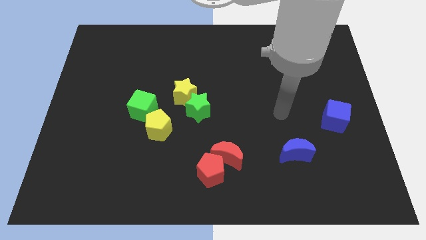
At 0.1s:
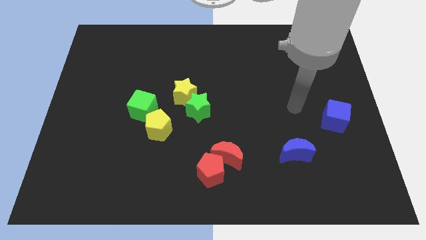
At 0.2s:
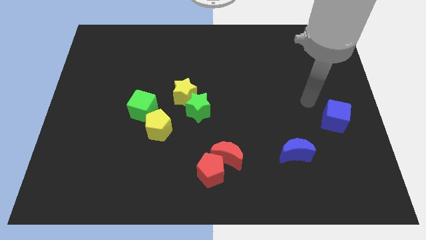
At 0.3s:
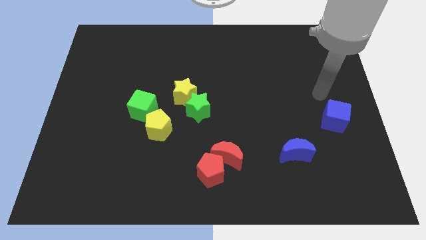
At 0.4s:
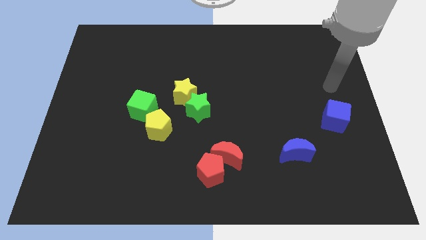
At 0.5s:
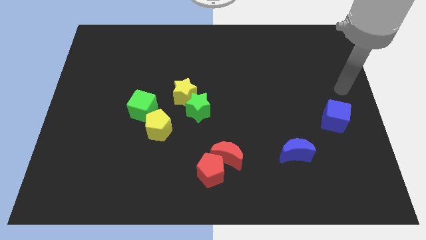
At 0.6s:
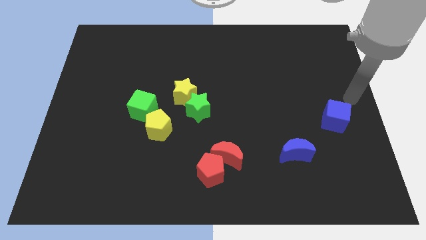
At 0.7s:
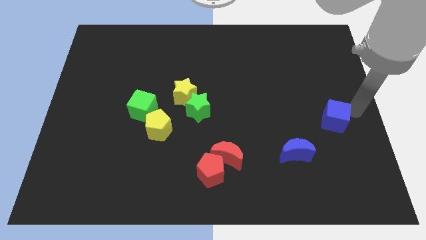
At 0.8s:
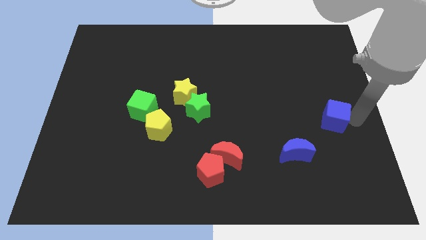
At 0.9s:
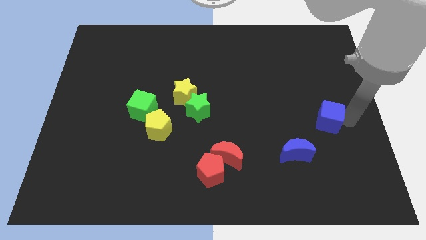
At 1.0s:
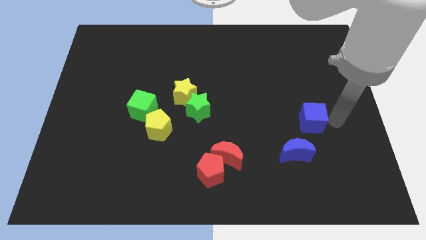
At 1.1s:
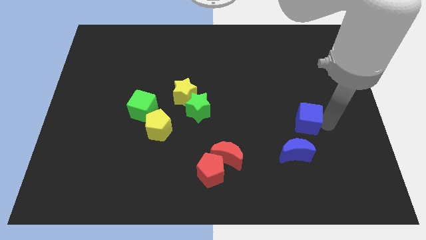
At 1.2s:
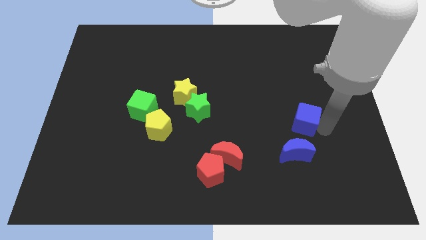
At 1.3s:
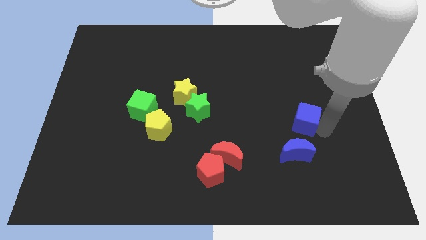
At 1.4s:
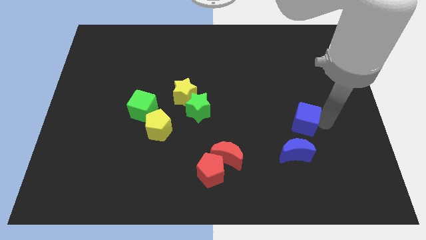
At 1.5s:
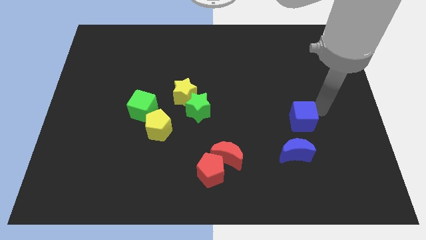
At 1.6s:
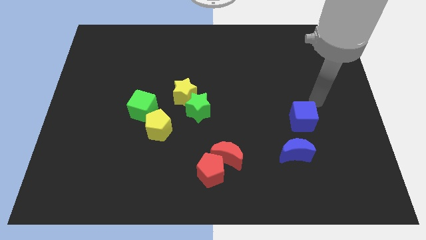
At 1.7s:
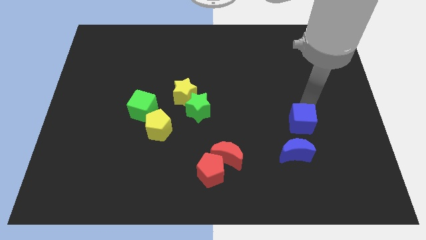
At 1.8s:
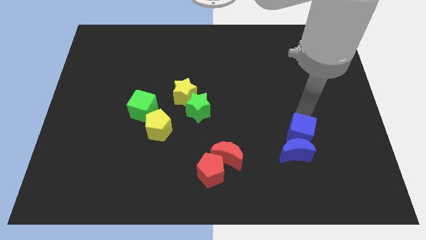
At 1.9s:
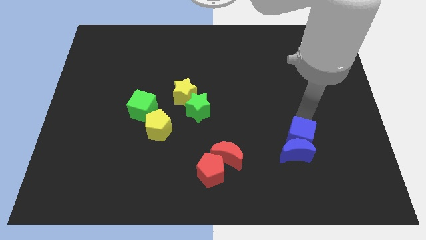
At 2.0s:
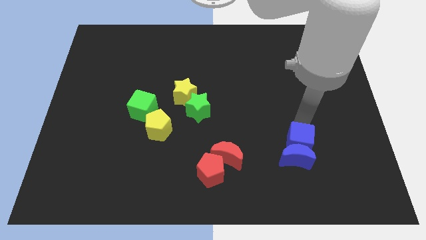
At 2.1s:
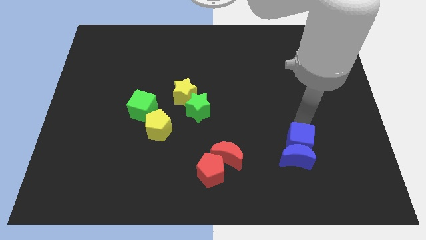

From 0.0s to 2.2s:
move the blue cube vertically above the blue moon

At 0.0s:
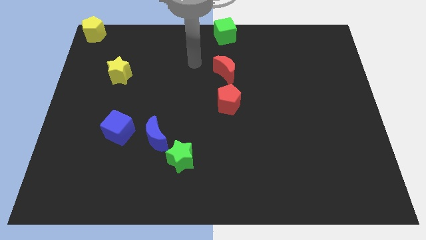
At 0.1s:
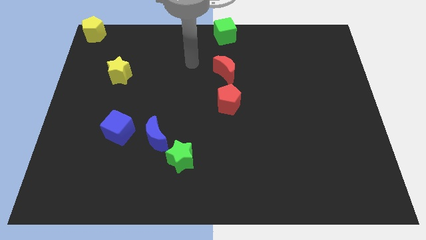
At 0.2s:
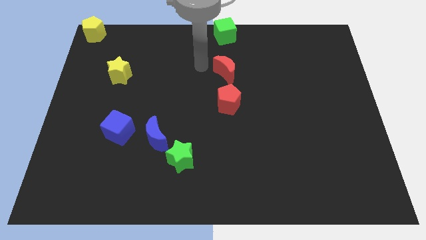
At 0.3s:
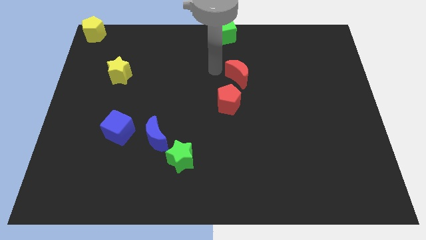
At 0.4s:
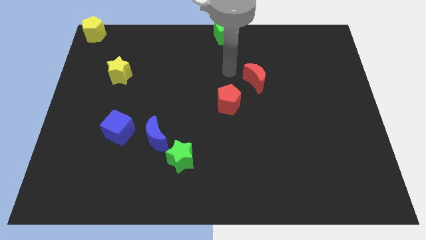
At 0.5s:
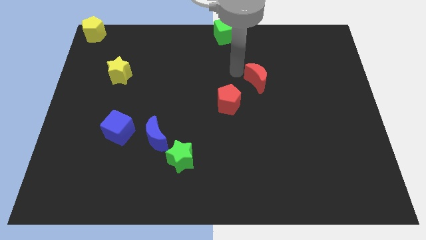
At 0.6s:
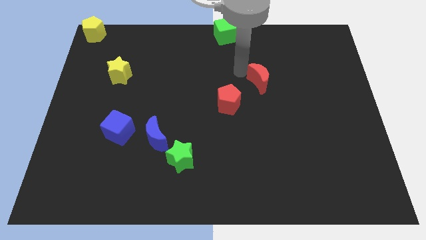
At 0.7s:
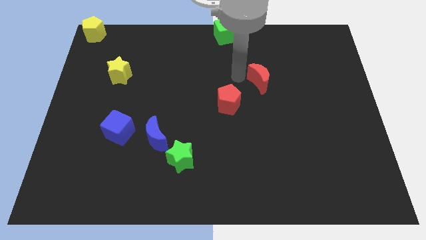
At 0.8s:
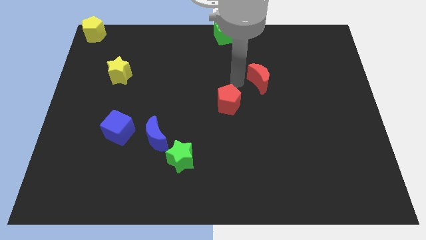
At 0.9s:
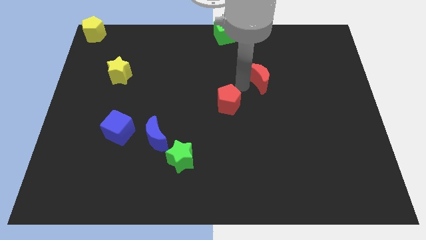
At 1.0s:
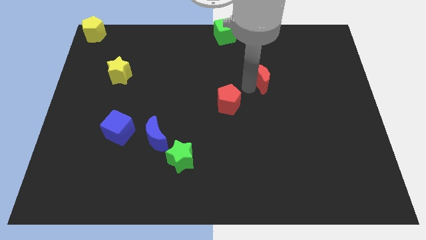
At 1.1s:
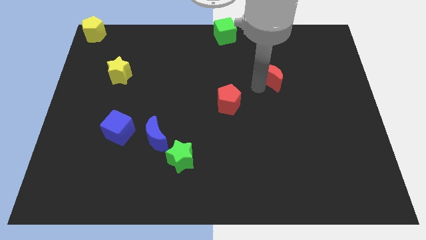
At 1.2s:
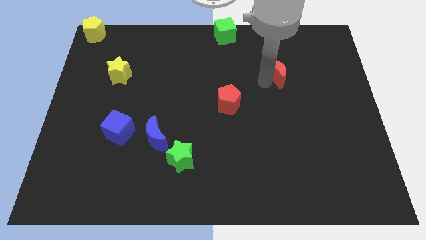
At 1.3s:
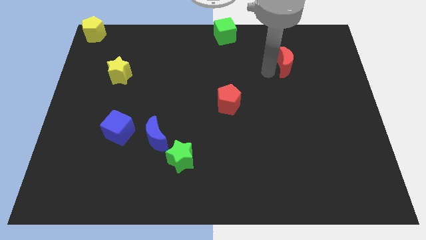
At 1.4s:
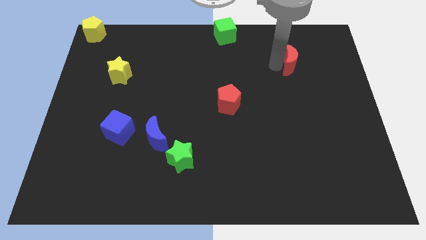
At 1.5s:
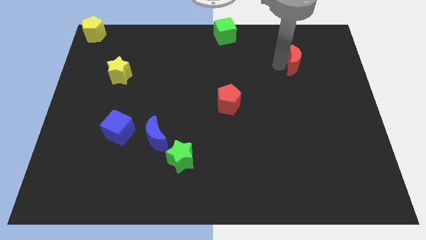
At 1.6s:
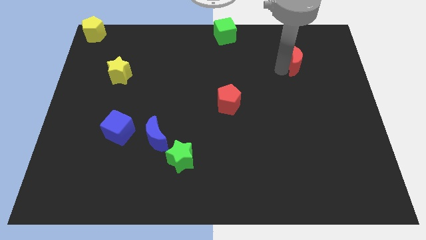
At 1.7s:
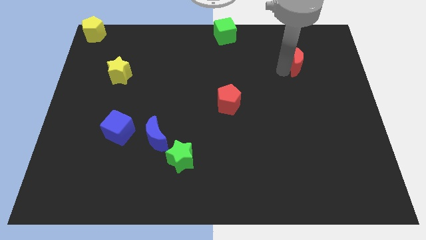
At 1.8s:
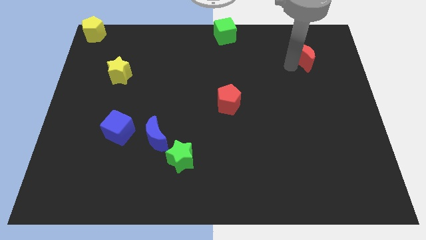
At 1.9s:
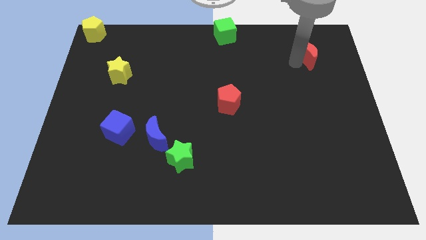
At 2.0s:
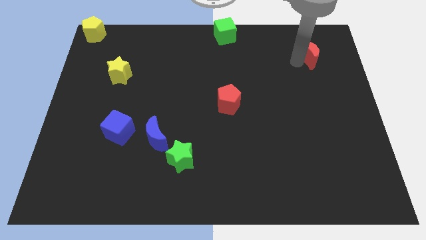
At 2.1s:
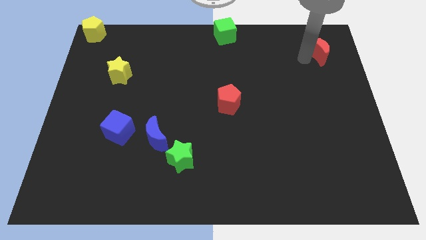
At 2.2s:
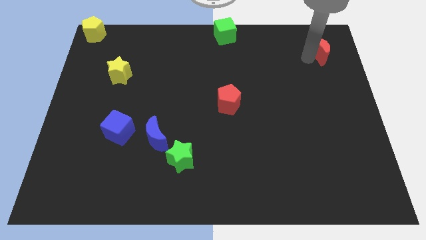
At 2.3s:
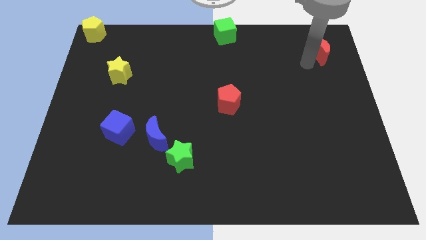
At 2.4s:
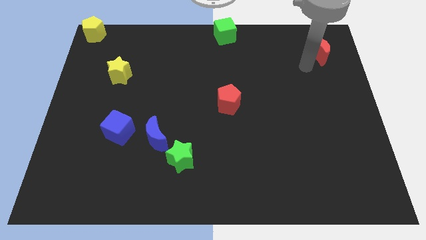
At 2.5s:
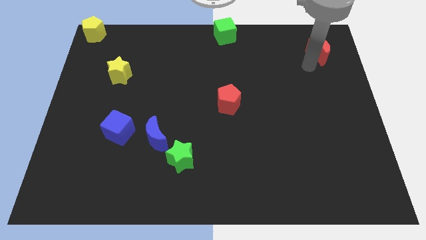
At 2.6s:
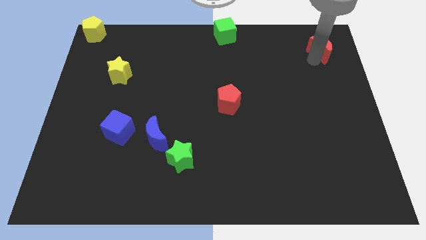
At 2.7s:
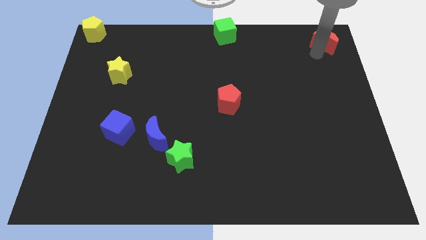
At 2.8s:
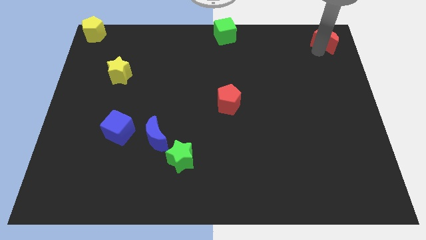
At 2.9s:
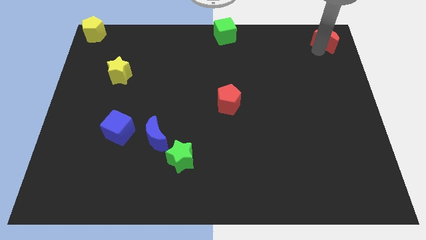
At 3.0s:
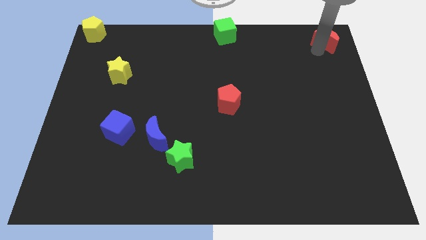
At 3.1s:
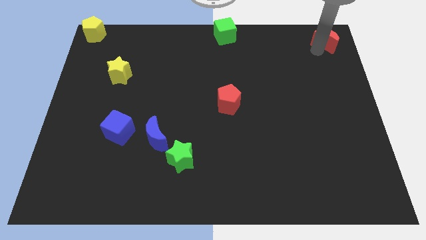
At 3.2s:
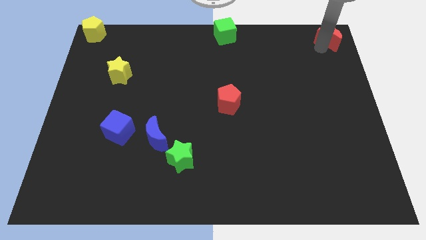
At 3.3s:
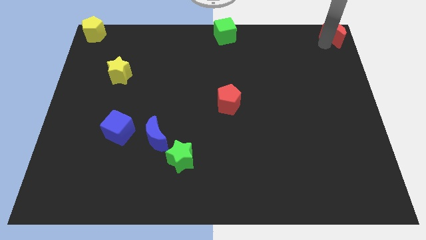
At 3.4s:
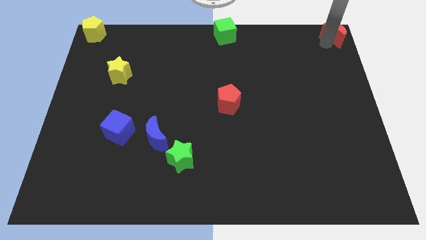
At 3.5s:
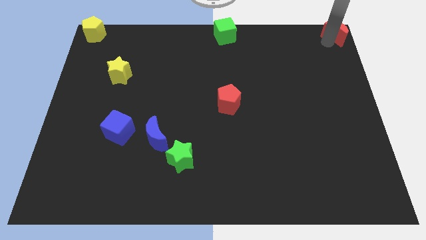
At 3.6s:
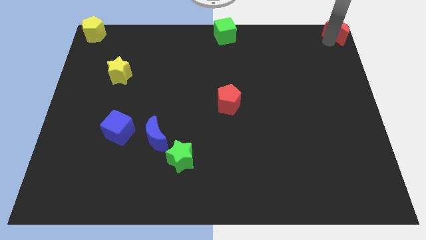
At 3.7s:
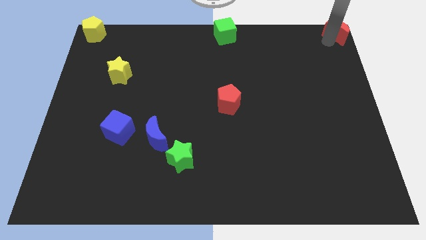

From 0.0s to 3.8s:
push red moon to the top right corner

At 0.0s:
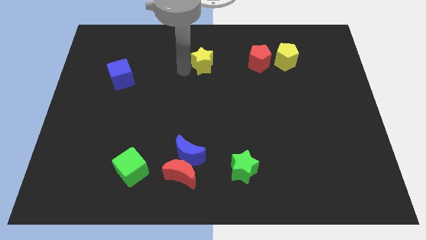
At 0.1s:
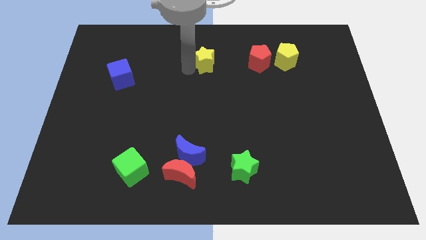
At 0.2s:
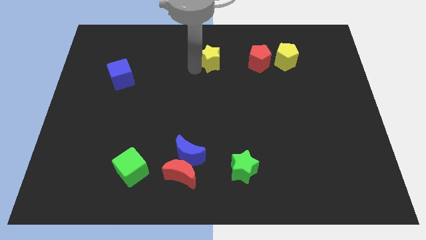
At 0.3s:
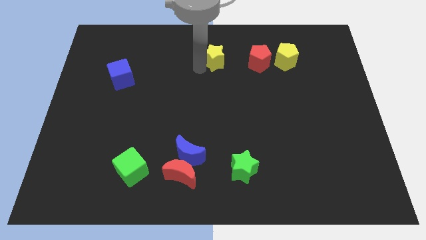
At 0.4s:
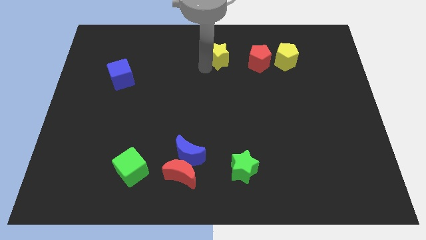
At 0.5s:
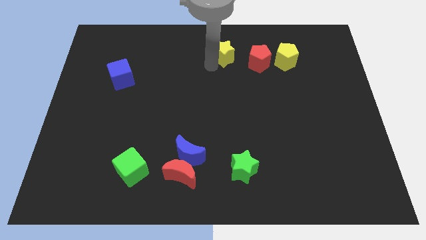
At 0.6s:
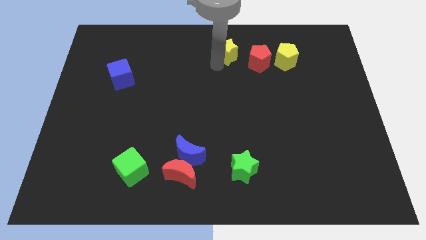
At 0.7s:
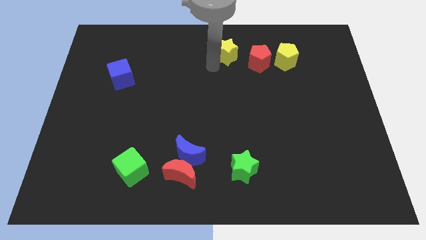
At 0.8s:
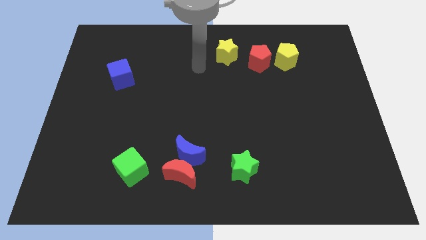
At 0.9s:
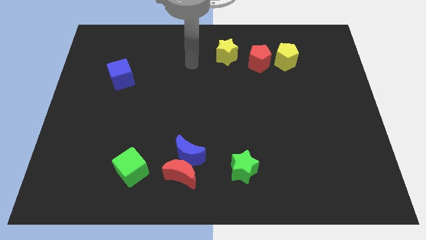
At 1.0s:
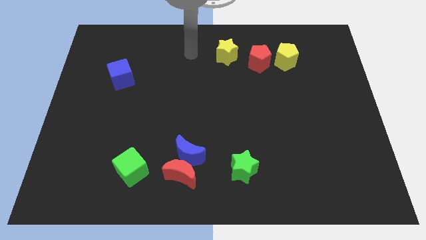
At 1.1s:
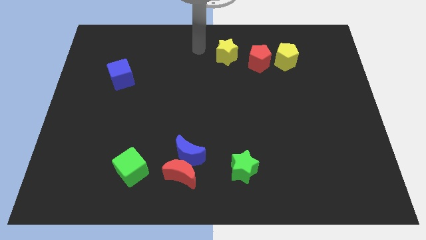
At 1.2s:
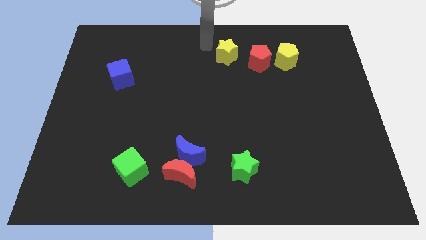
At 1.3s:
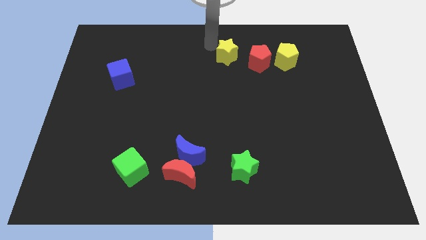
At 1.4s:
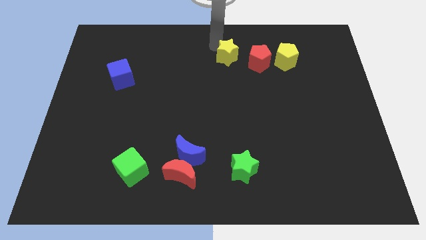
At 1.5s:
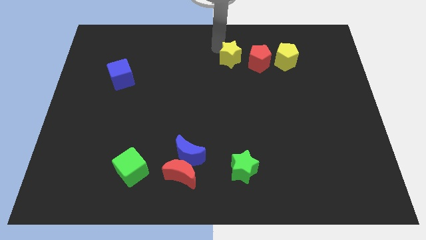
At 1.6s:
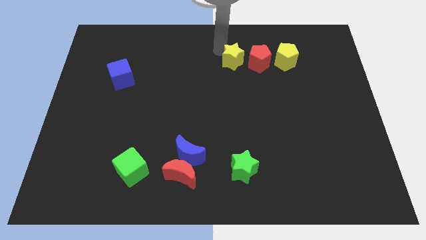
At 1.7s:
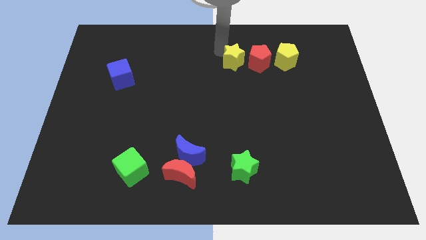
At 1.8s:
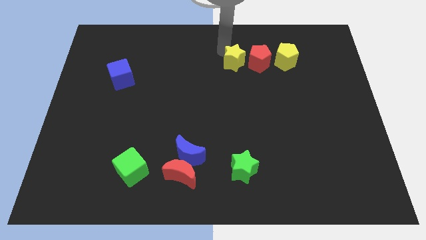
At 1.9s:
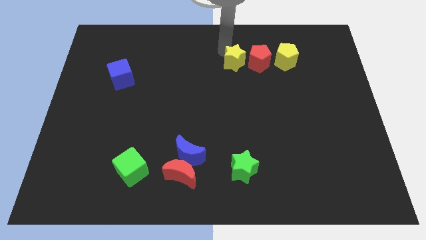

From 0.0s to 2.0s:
place a yellow star beside the red pentagon

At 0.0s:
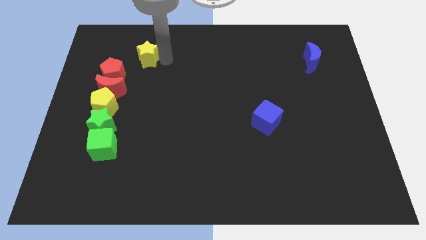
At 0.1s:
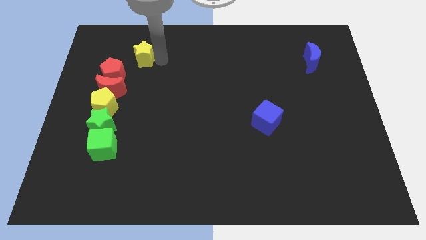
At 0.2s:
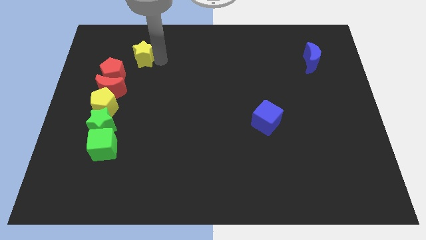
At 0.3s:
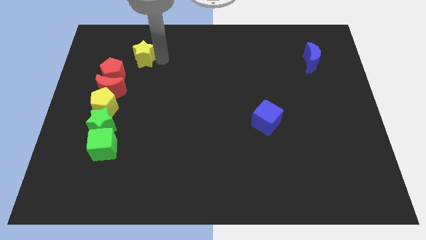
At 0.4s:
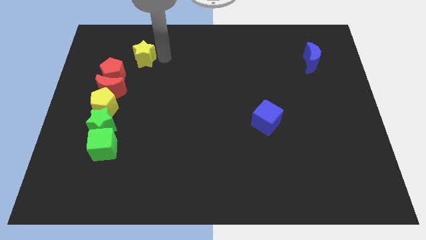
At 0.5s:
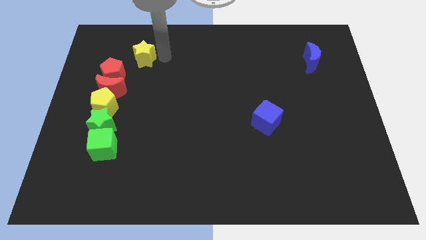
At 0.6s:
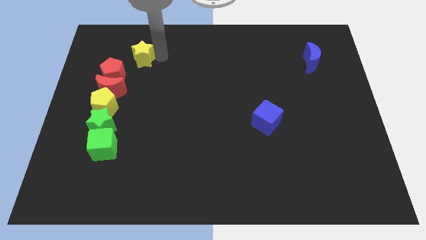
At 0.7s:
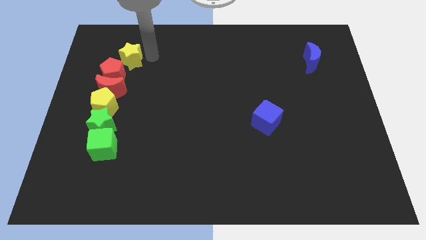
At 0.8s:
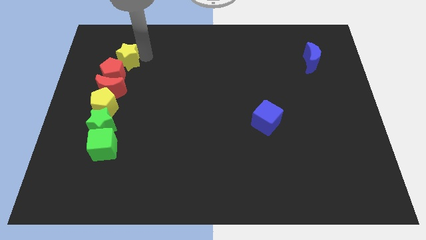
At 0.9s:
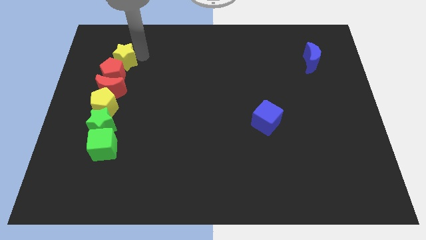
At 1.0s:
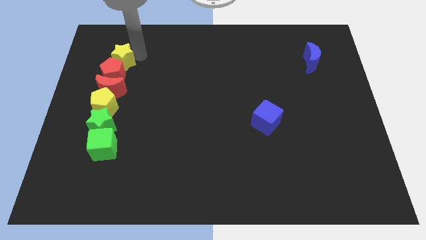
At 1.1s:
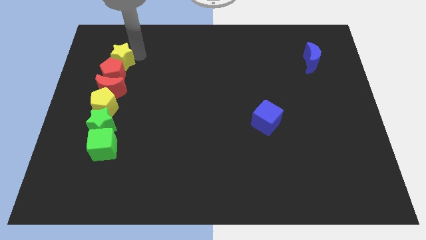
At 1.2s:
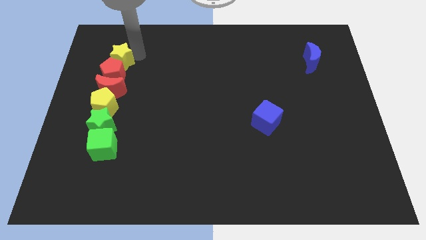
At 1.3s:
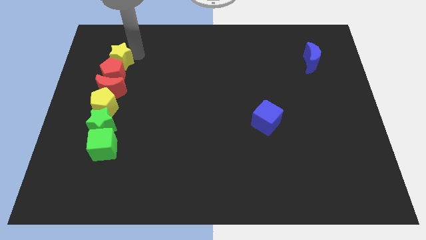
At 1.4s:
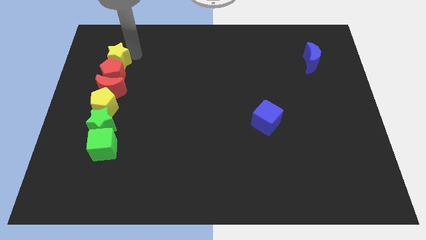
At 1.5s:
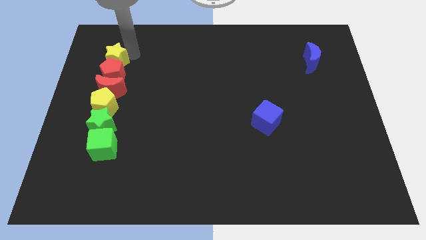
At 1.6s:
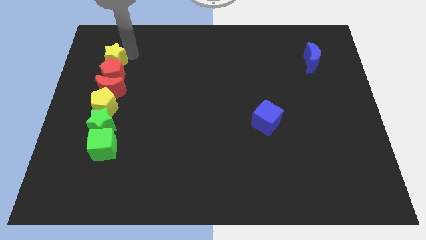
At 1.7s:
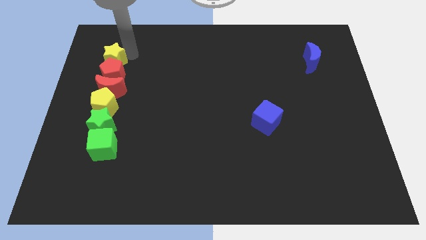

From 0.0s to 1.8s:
place the yellow star at the top of the red pentagon
